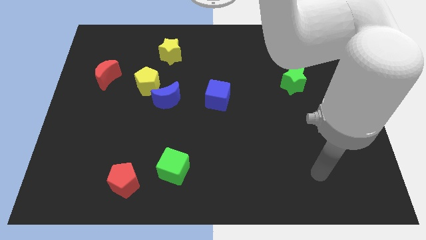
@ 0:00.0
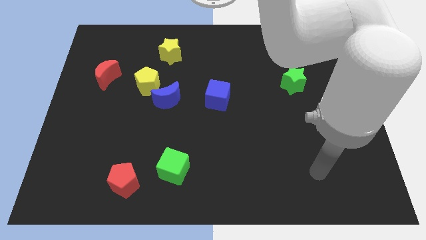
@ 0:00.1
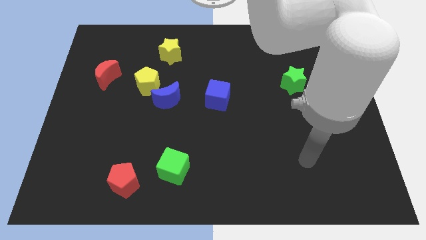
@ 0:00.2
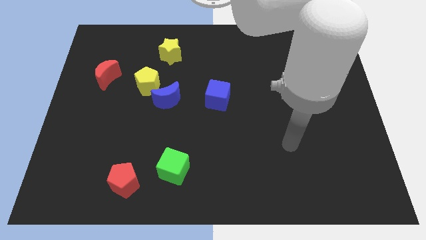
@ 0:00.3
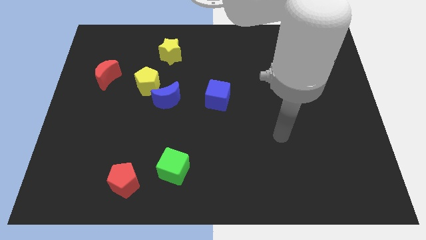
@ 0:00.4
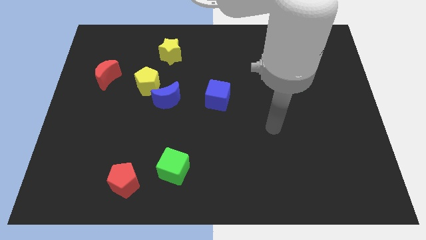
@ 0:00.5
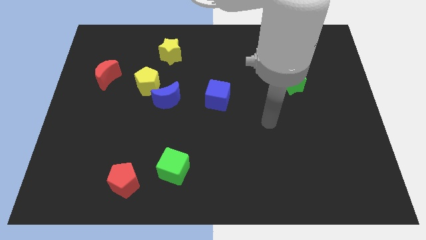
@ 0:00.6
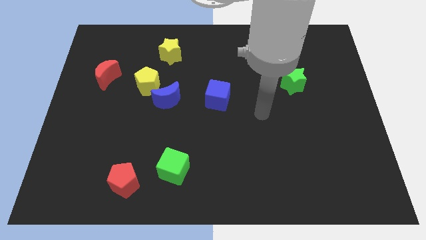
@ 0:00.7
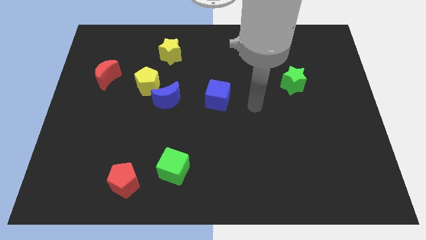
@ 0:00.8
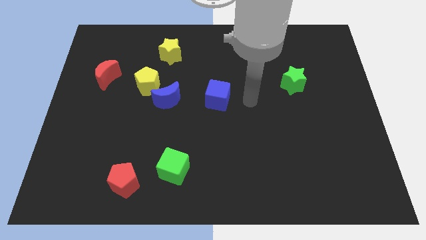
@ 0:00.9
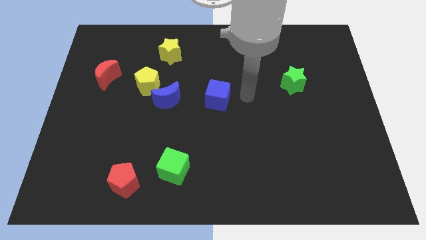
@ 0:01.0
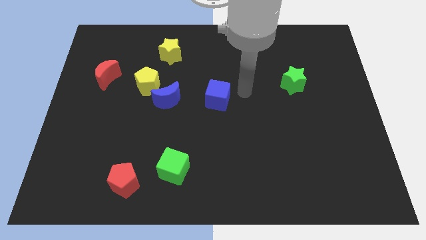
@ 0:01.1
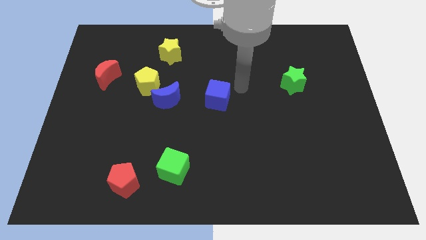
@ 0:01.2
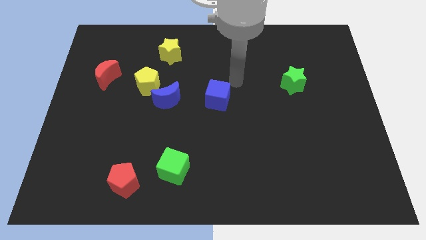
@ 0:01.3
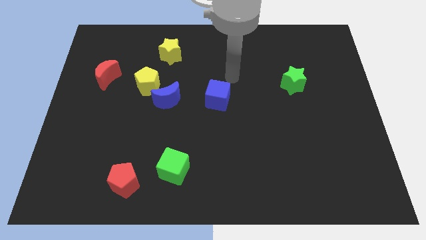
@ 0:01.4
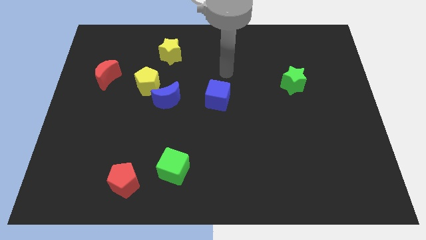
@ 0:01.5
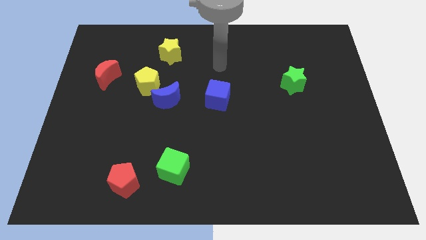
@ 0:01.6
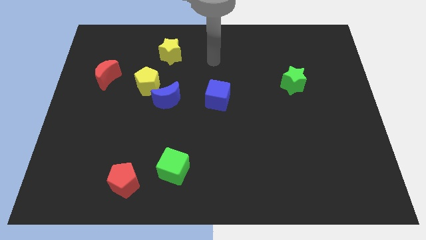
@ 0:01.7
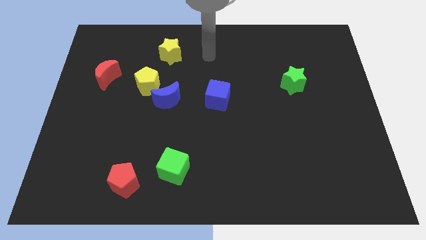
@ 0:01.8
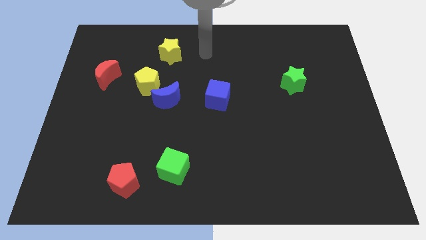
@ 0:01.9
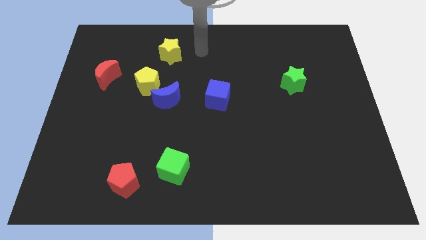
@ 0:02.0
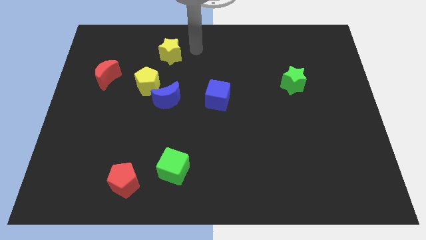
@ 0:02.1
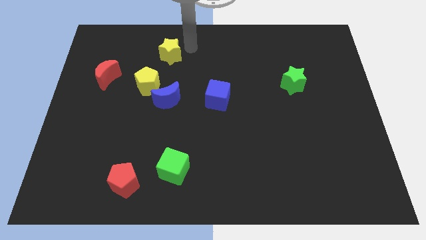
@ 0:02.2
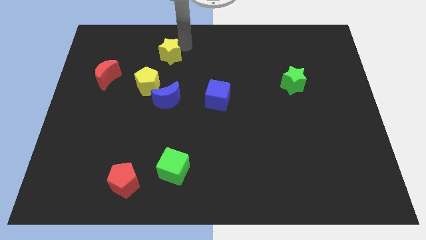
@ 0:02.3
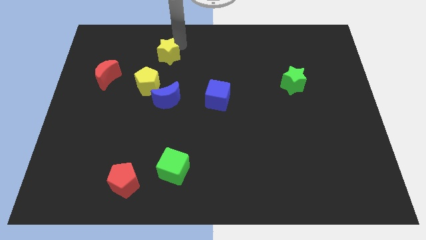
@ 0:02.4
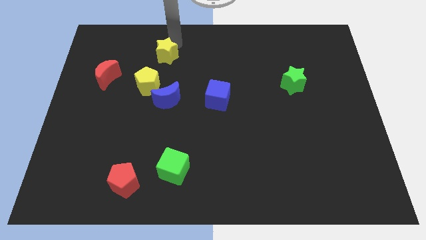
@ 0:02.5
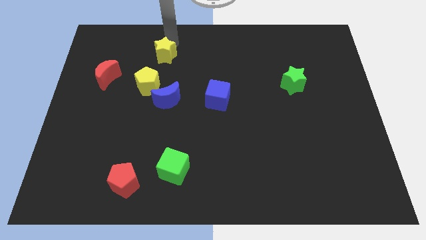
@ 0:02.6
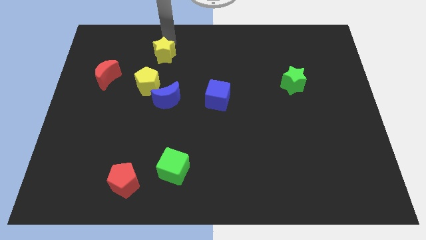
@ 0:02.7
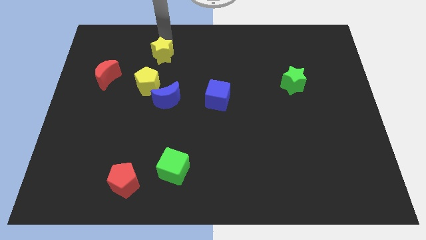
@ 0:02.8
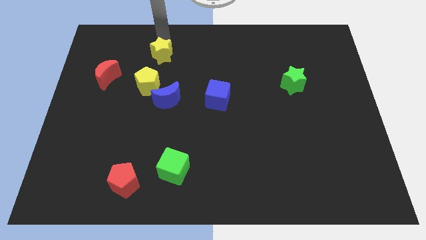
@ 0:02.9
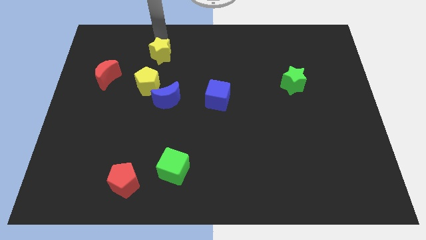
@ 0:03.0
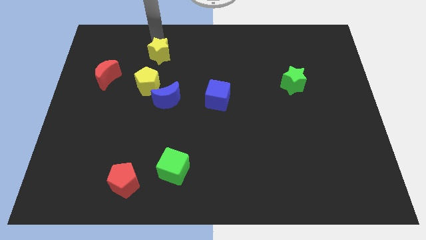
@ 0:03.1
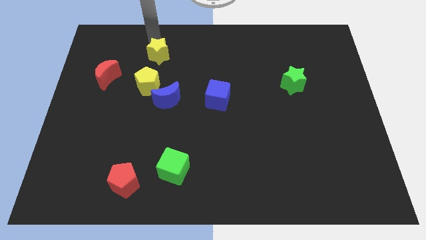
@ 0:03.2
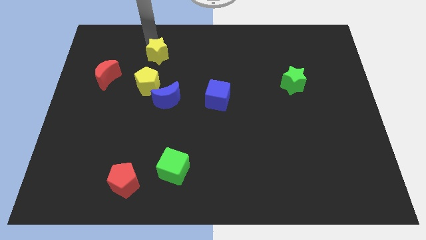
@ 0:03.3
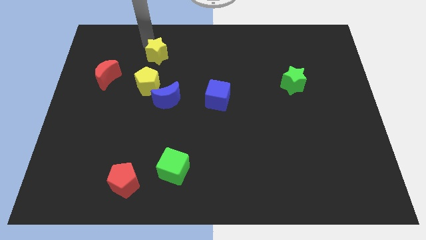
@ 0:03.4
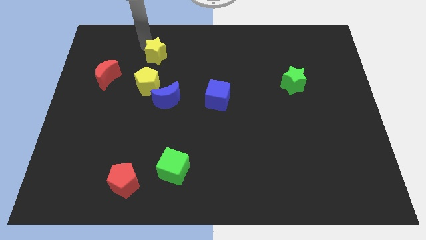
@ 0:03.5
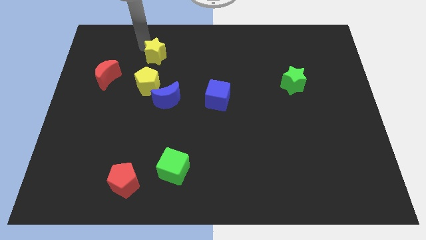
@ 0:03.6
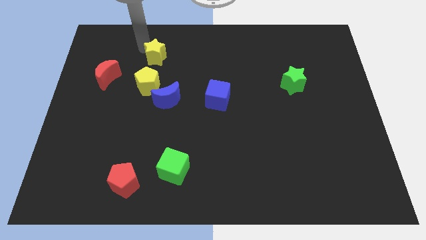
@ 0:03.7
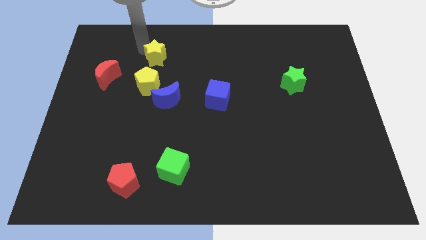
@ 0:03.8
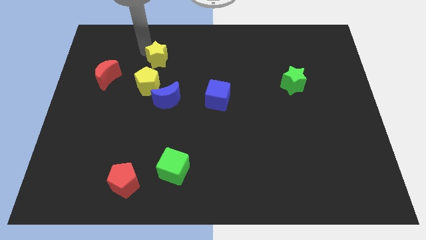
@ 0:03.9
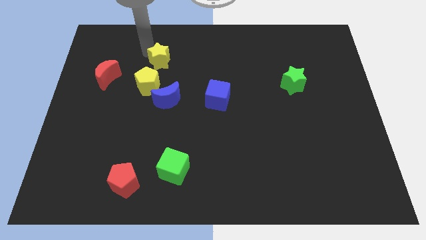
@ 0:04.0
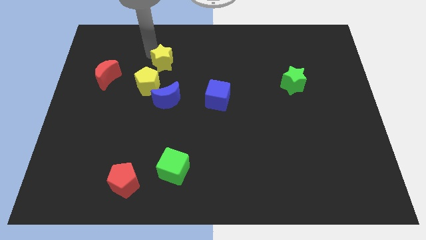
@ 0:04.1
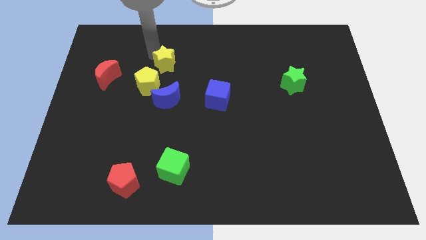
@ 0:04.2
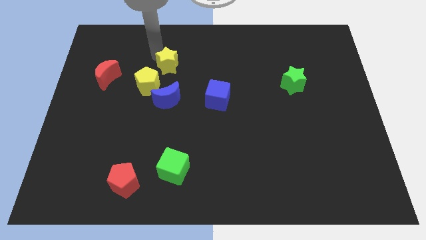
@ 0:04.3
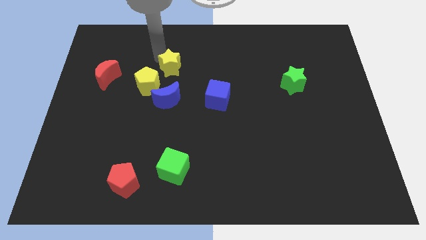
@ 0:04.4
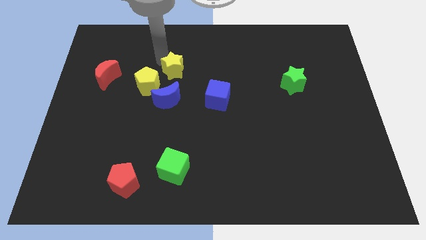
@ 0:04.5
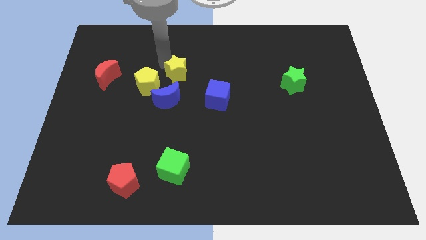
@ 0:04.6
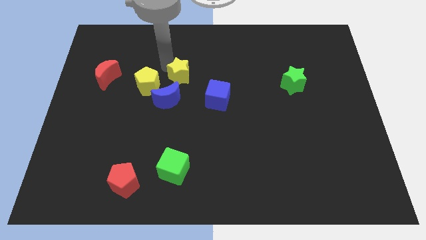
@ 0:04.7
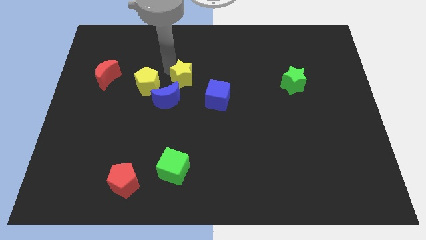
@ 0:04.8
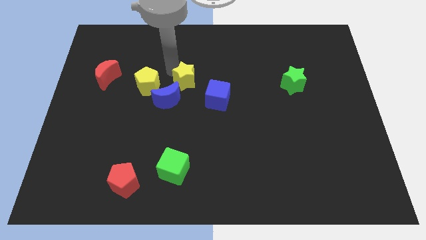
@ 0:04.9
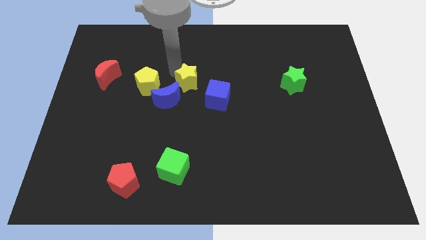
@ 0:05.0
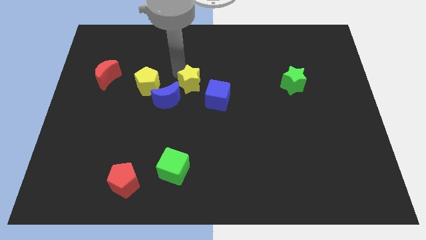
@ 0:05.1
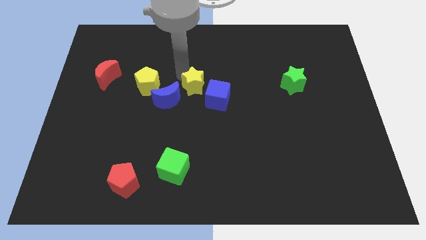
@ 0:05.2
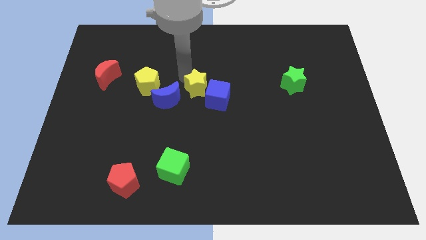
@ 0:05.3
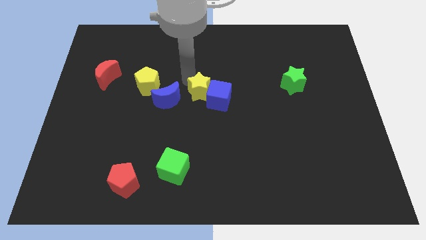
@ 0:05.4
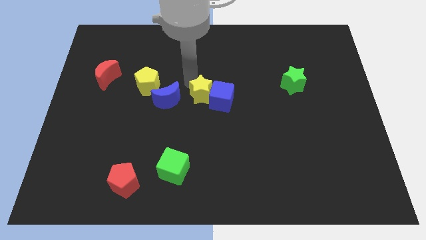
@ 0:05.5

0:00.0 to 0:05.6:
put the yellow star next to the blue cube

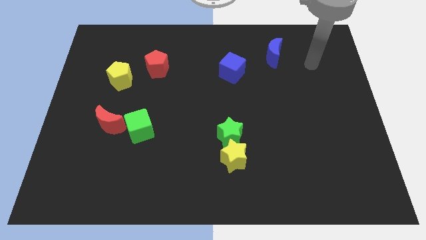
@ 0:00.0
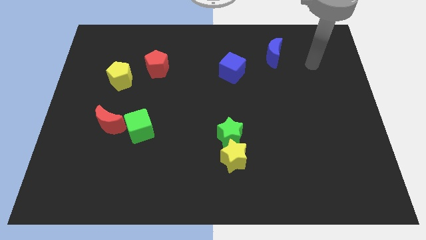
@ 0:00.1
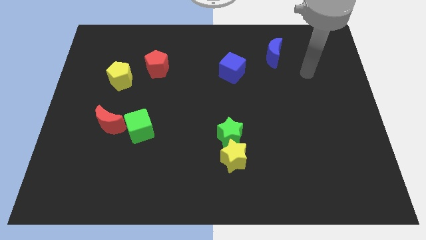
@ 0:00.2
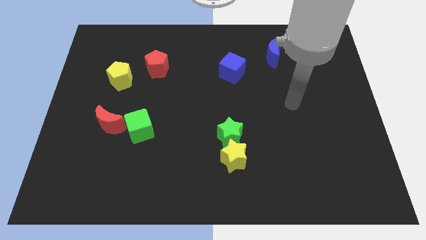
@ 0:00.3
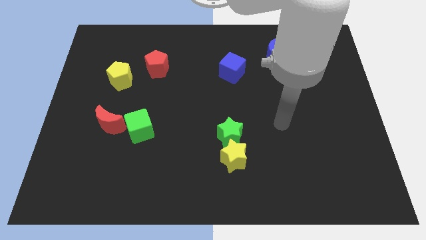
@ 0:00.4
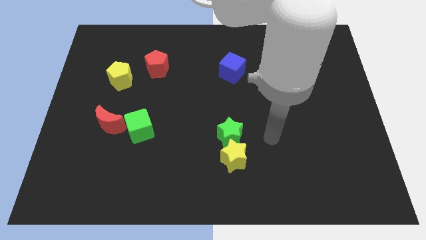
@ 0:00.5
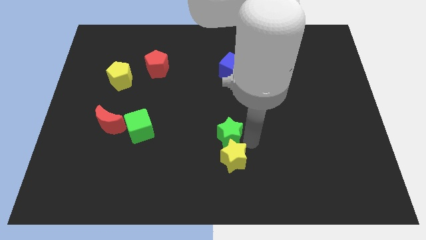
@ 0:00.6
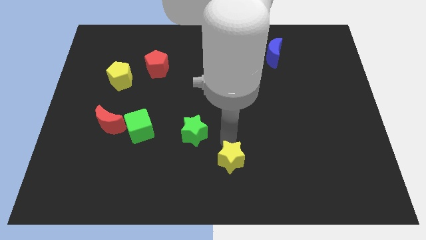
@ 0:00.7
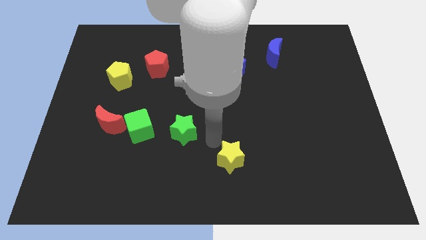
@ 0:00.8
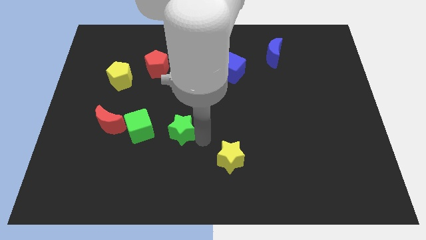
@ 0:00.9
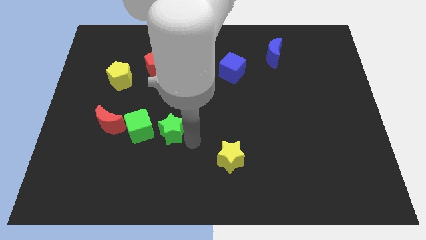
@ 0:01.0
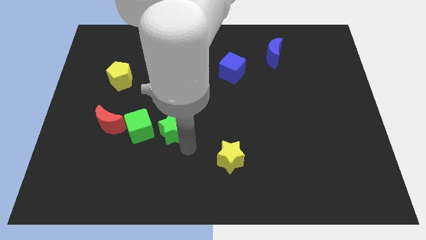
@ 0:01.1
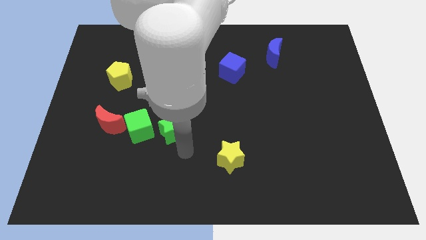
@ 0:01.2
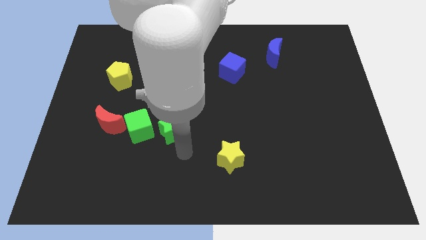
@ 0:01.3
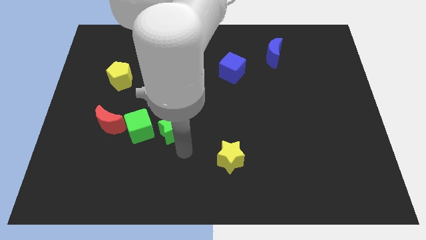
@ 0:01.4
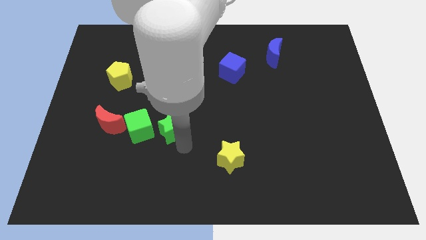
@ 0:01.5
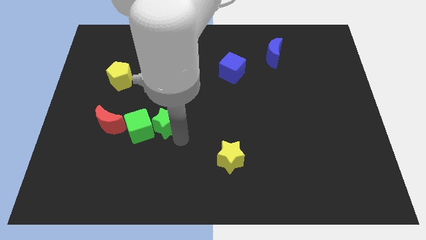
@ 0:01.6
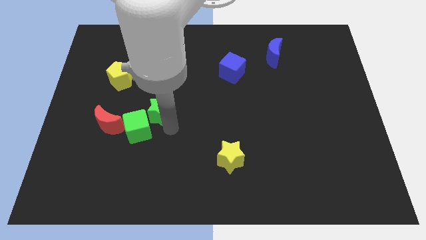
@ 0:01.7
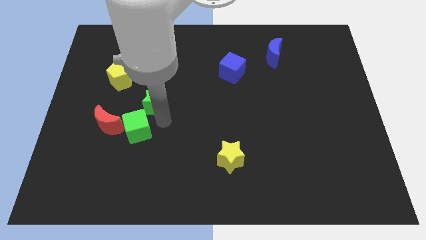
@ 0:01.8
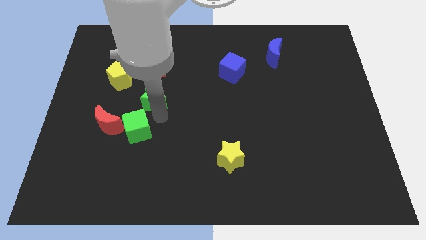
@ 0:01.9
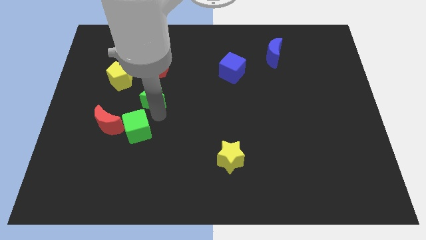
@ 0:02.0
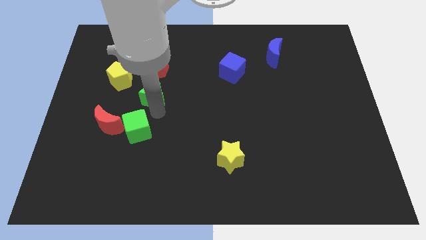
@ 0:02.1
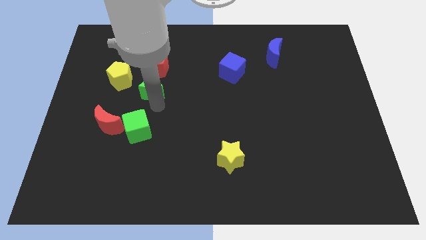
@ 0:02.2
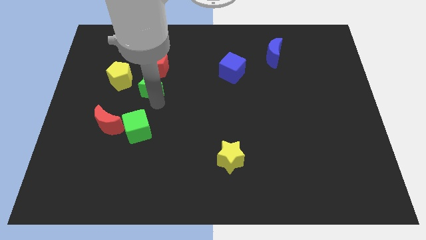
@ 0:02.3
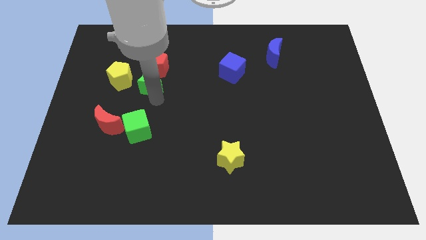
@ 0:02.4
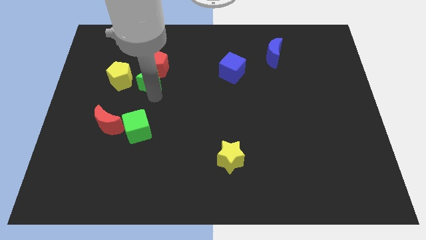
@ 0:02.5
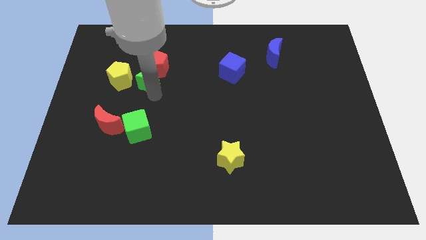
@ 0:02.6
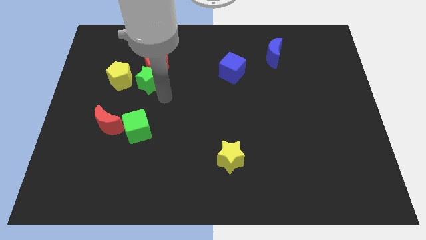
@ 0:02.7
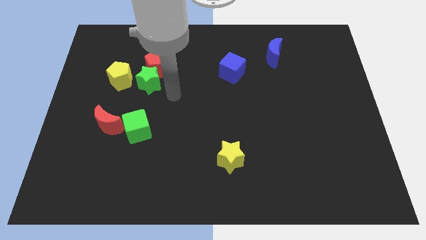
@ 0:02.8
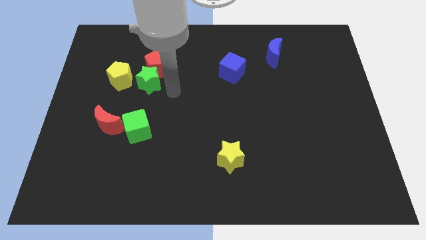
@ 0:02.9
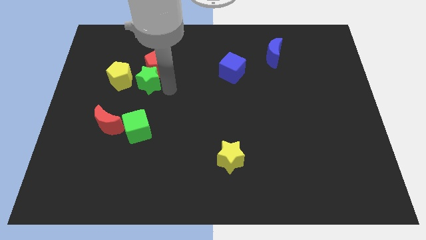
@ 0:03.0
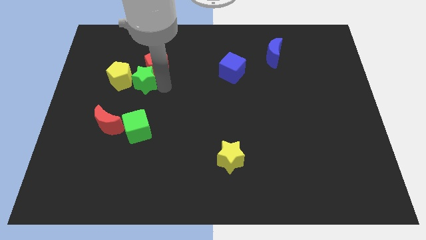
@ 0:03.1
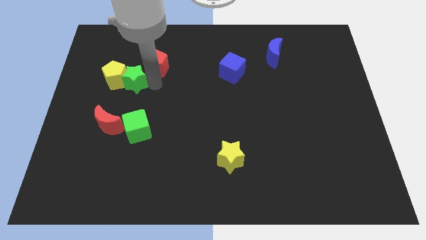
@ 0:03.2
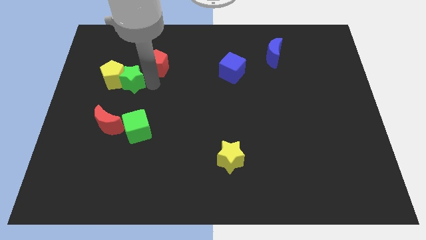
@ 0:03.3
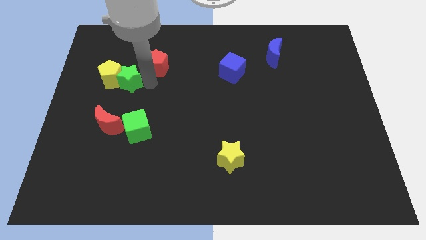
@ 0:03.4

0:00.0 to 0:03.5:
put the green star towards the yellow pentagon
